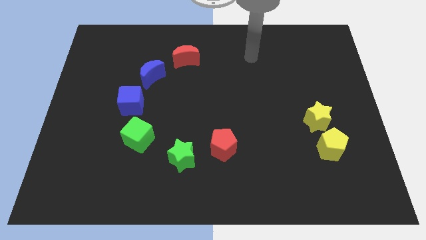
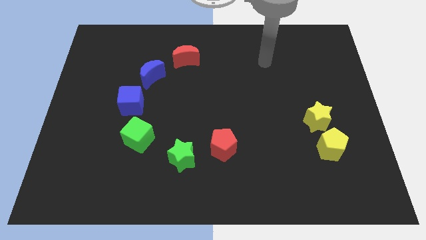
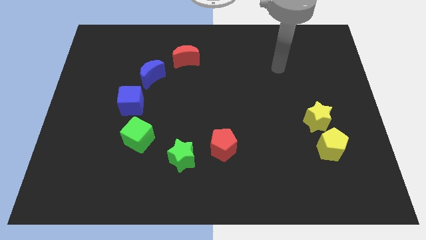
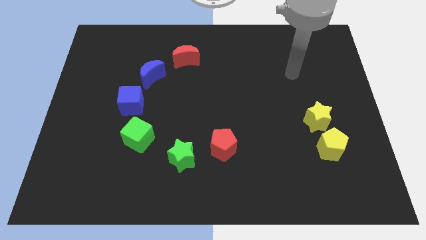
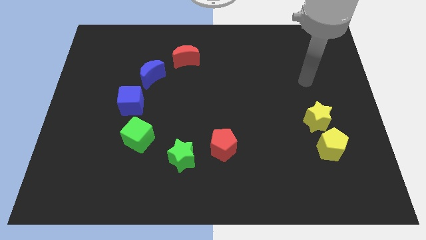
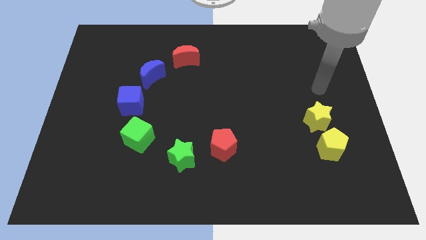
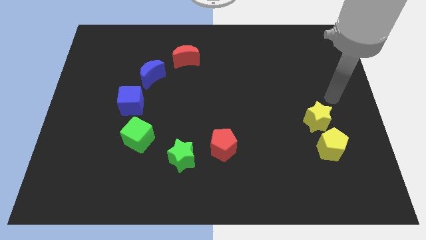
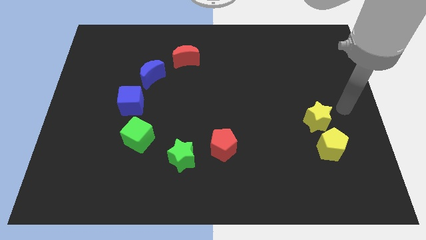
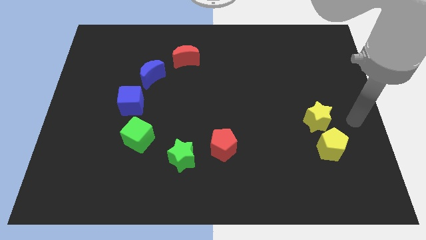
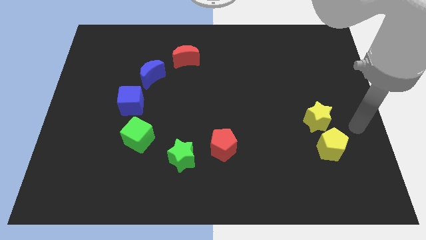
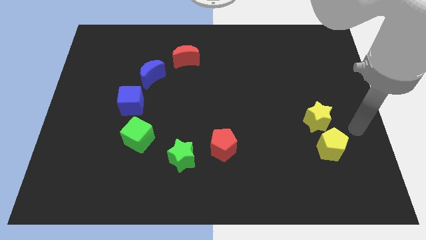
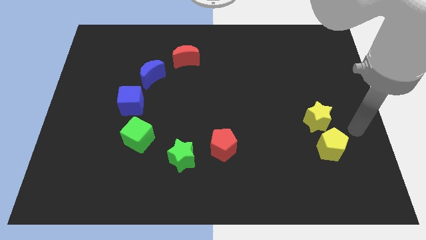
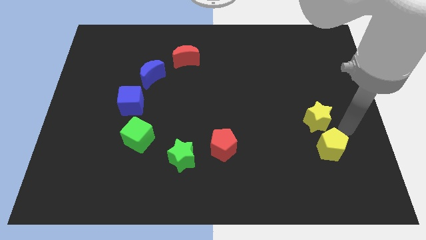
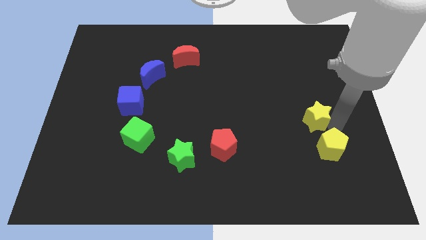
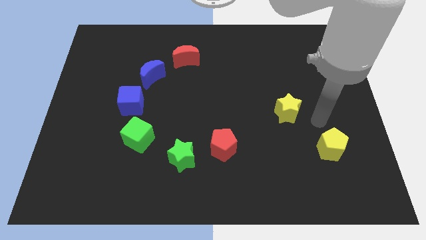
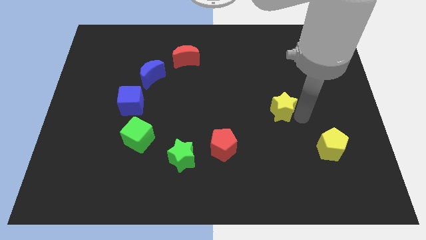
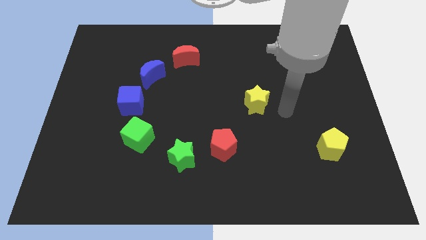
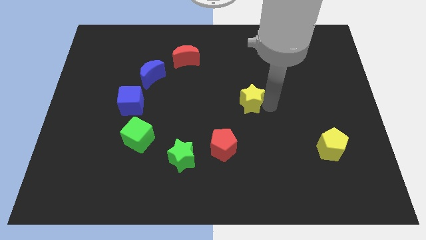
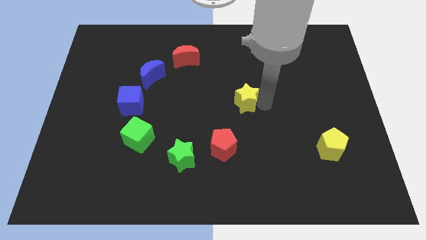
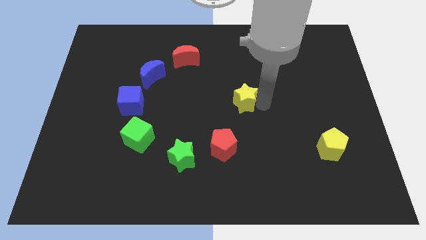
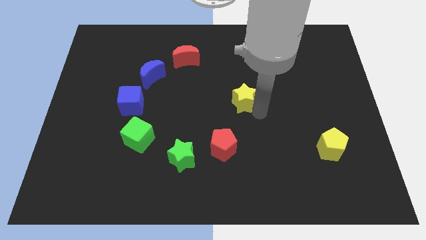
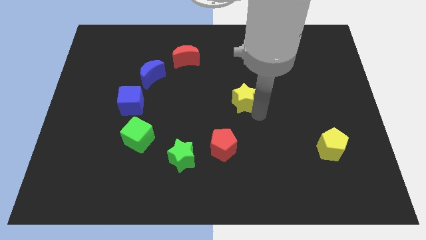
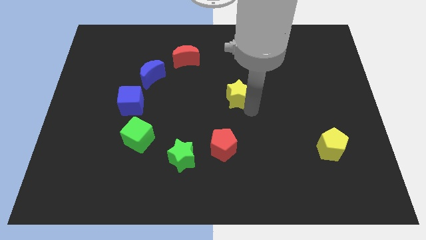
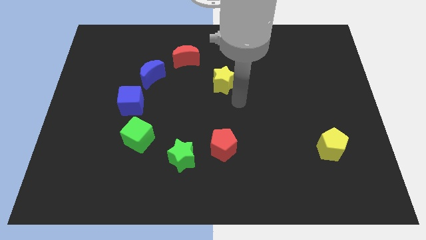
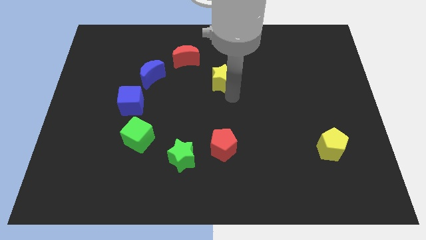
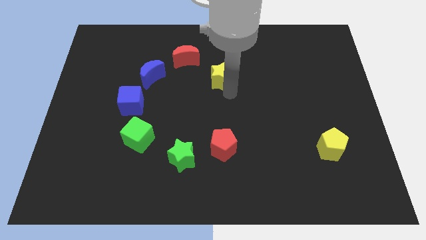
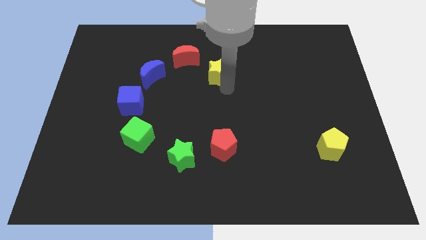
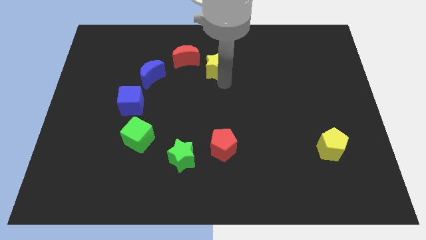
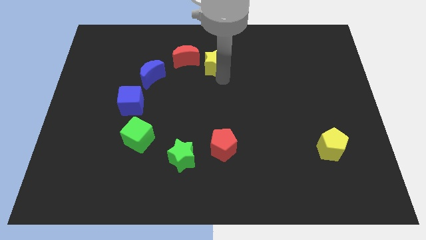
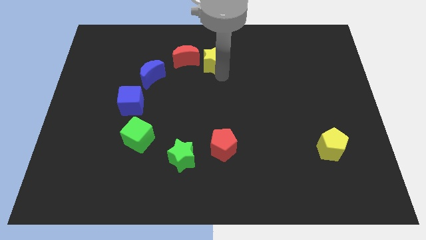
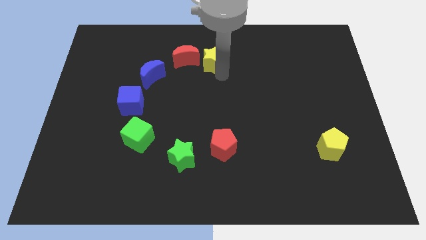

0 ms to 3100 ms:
place yellow star to the right of red moon

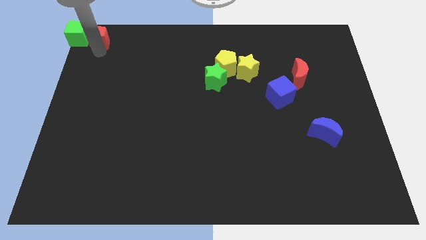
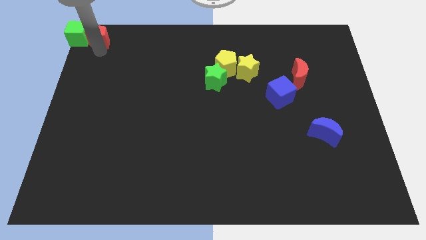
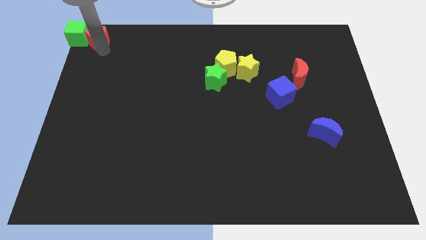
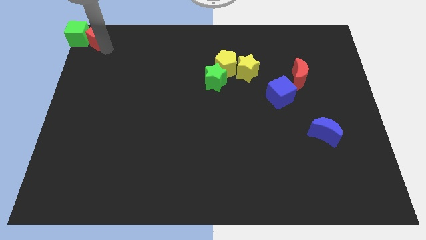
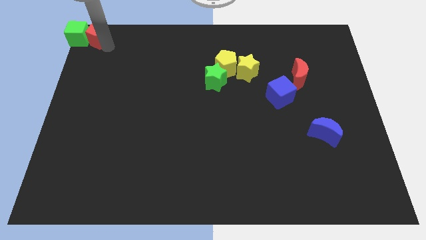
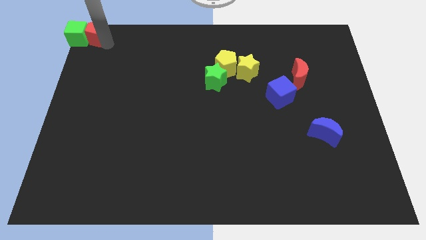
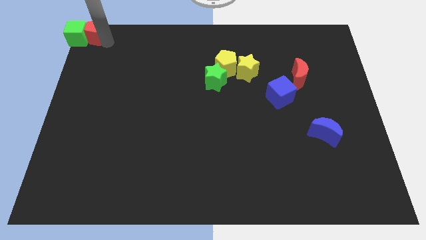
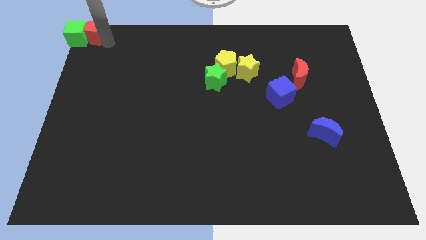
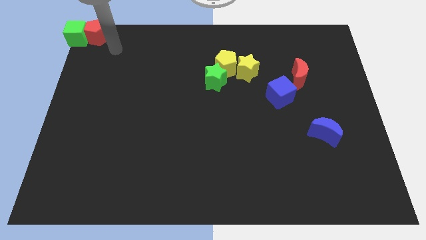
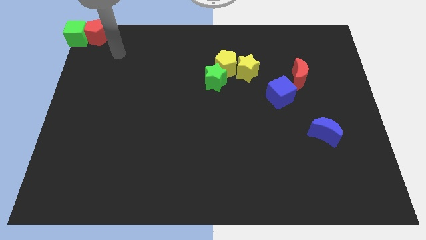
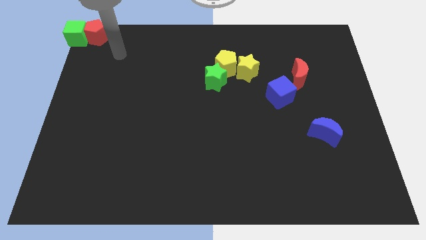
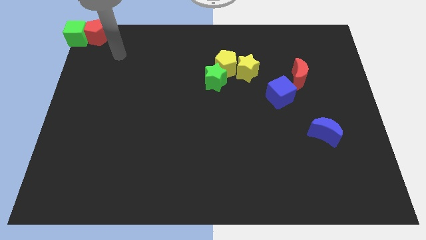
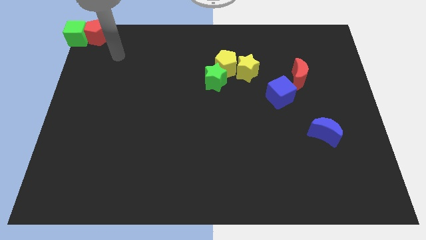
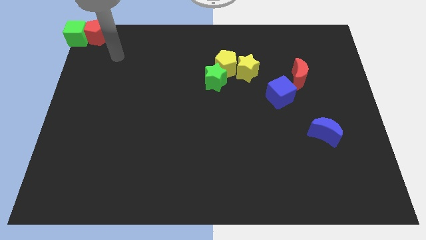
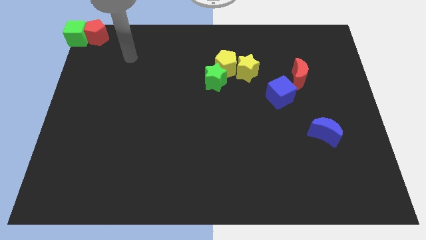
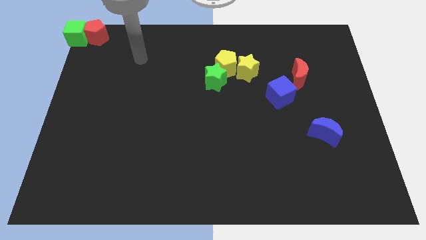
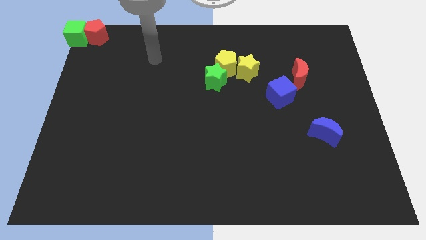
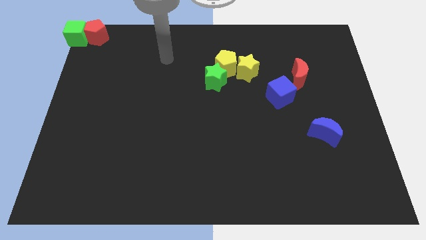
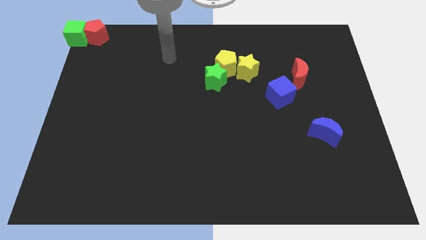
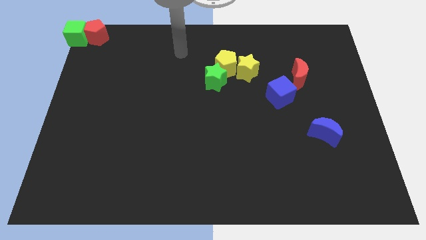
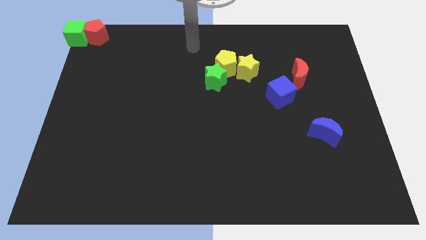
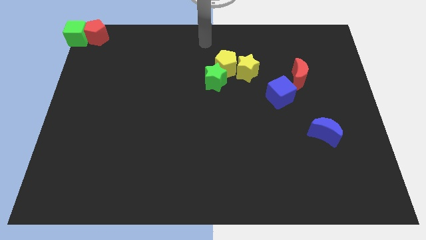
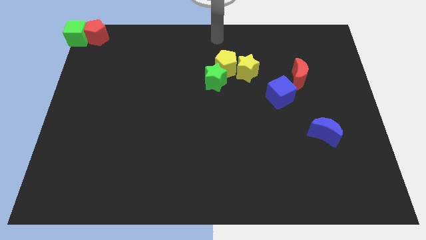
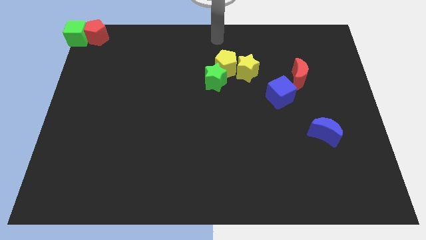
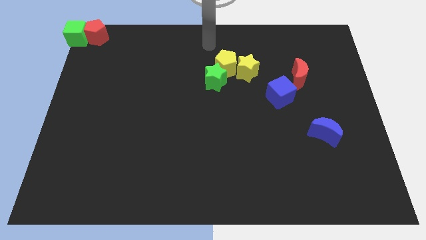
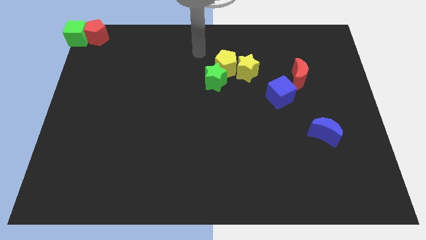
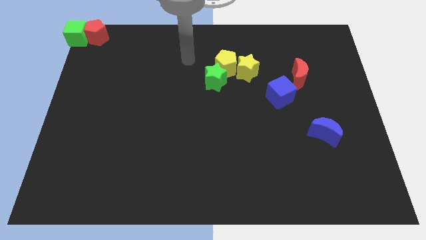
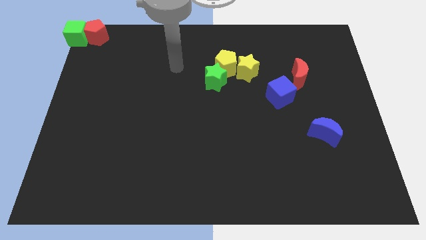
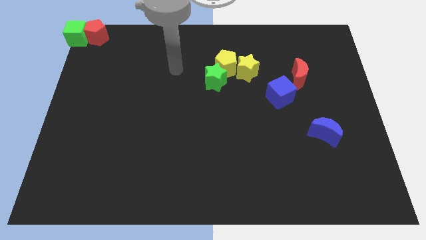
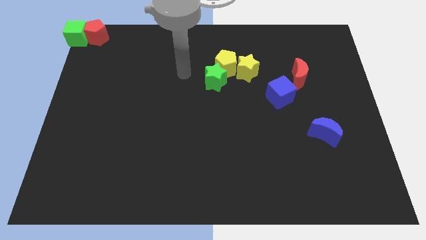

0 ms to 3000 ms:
move your arm to the left of the green star

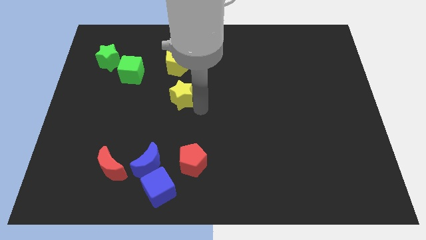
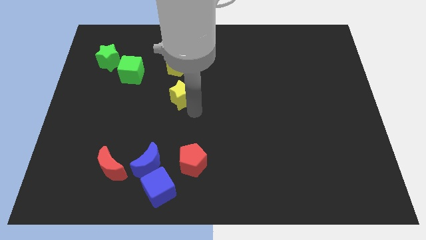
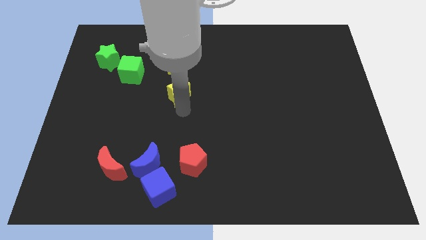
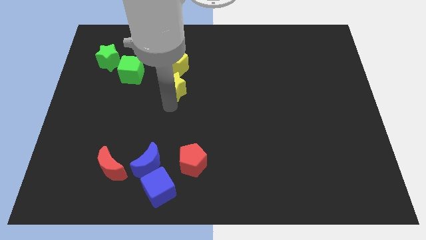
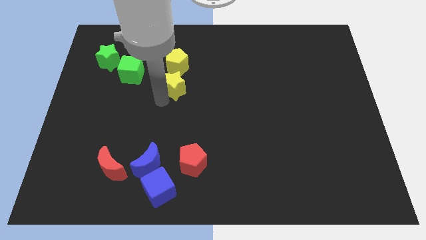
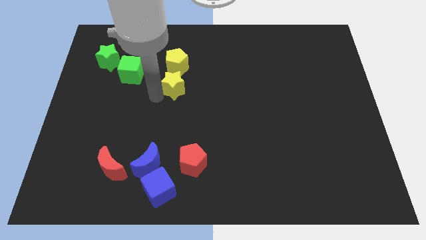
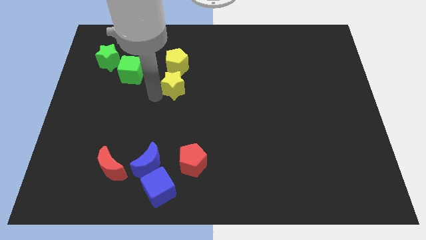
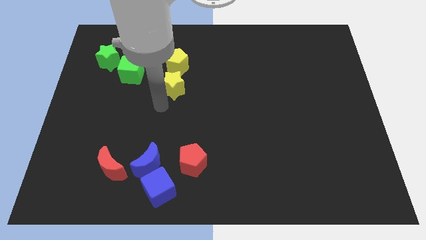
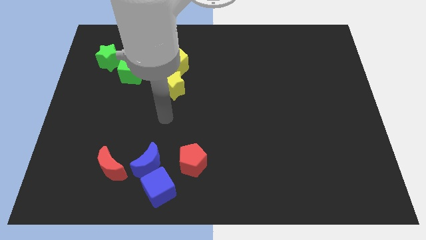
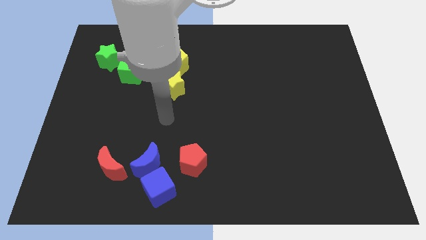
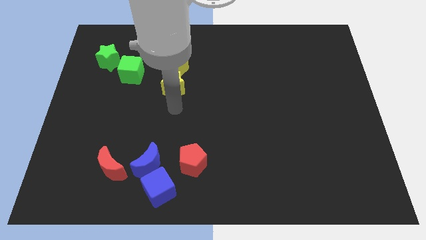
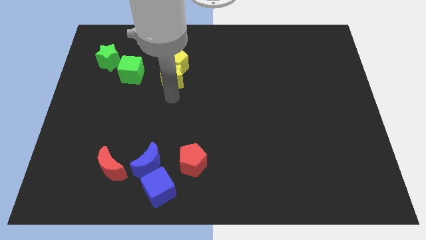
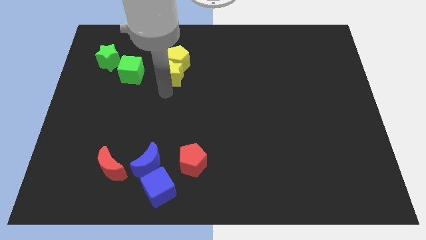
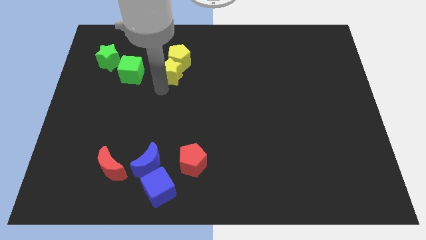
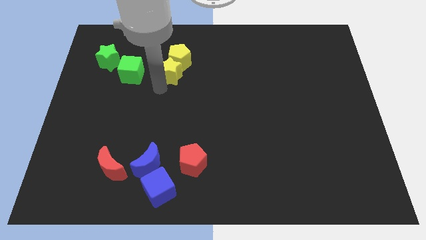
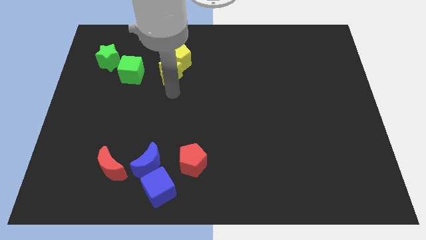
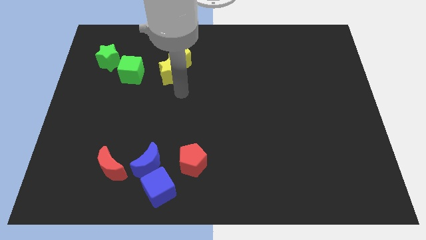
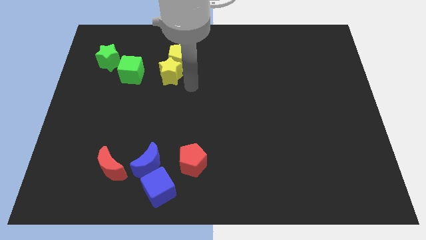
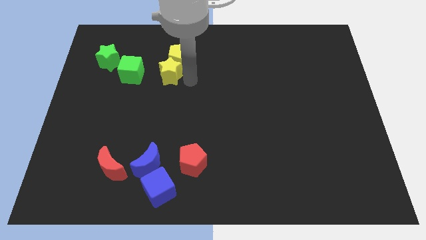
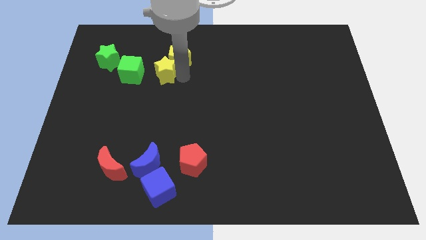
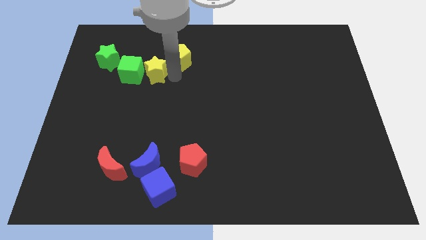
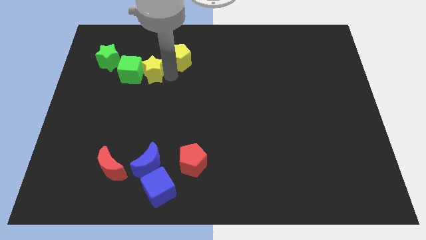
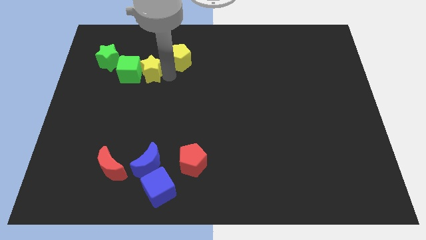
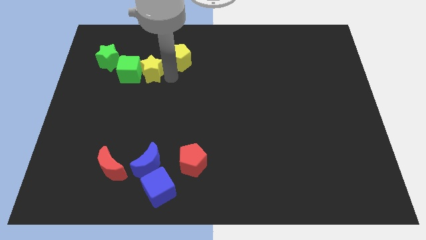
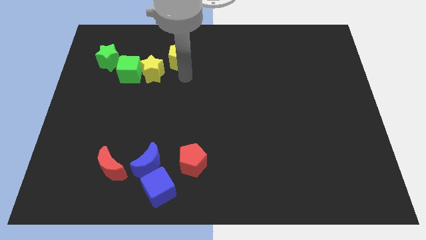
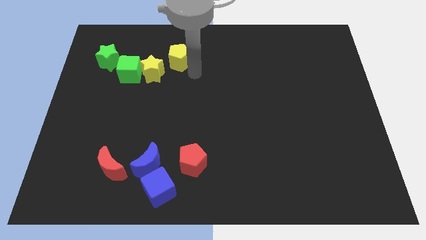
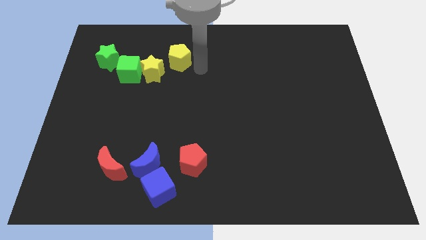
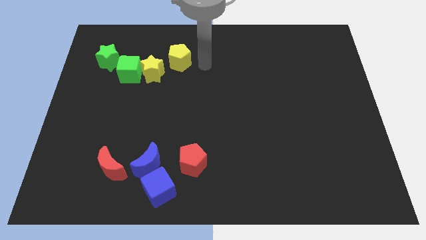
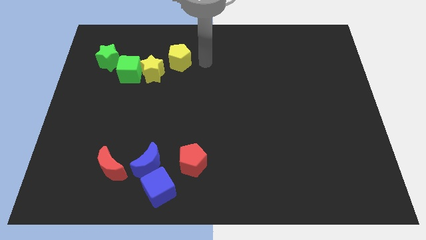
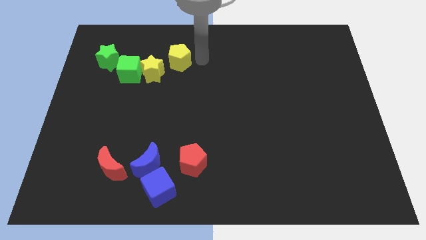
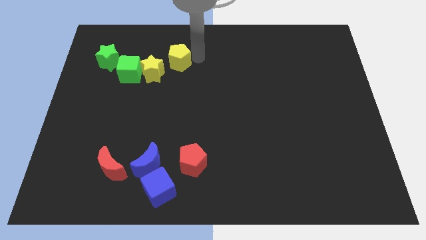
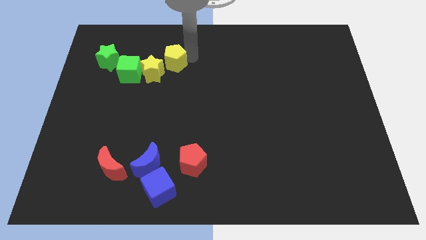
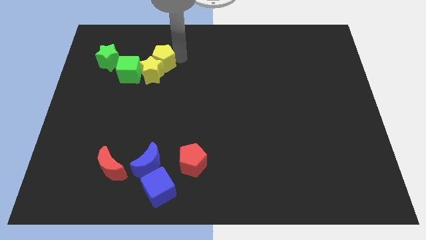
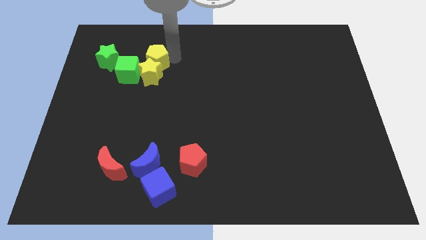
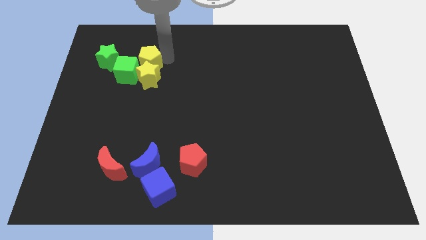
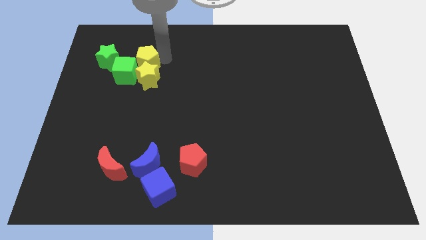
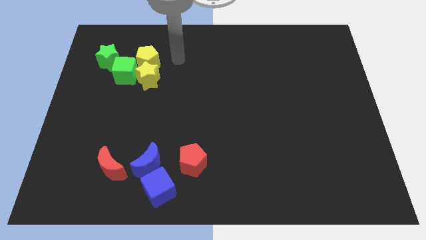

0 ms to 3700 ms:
push the yellow blocks to the right of the green cube
